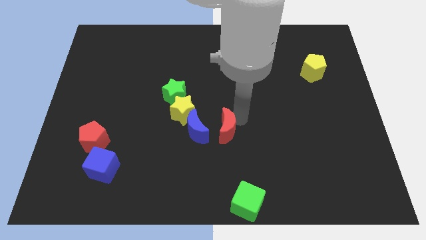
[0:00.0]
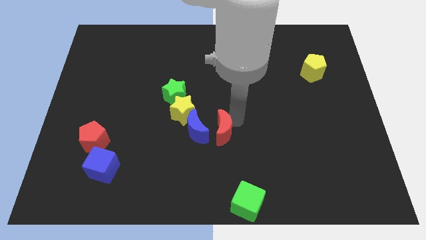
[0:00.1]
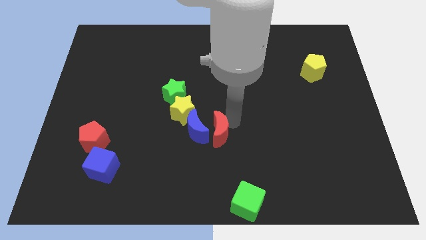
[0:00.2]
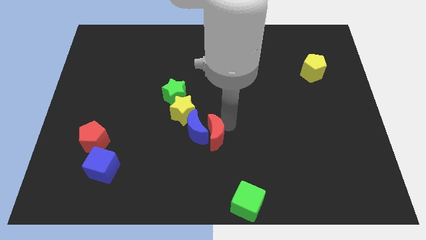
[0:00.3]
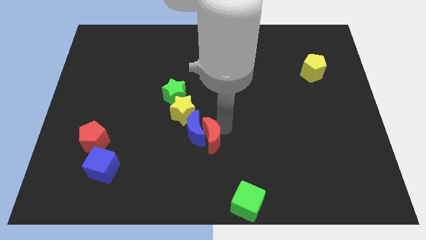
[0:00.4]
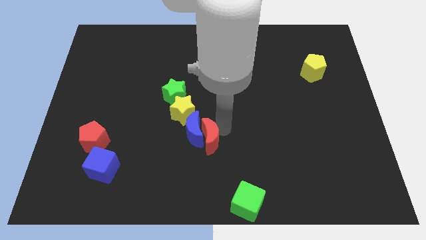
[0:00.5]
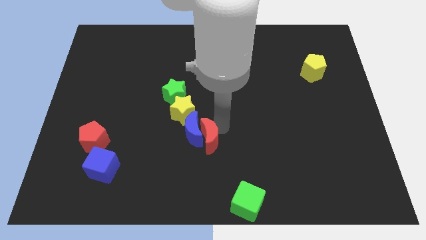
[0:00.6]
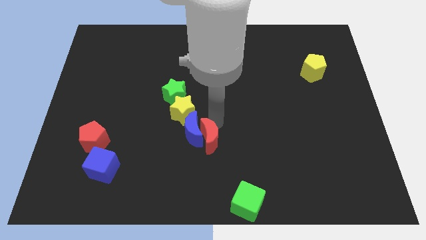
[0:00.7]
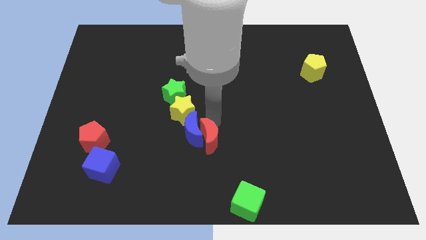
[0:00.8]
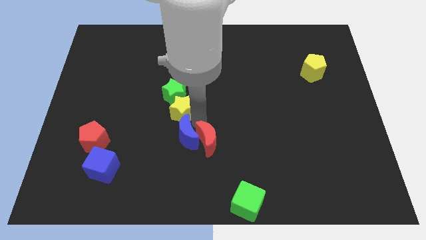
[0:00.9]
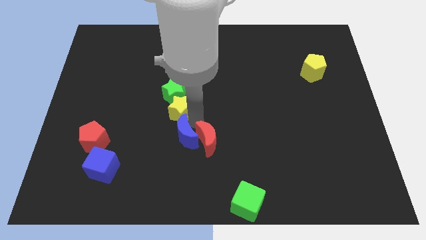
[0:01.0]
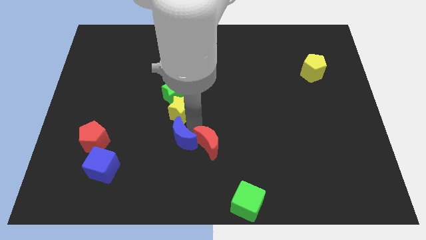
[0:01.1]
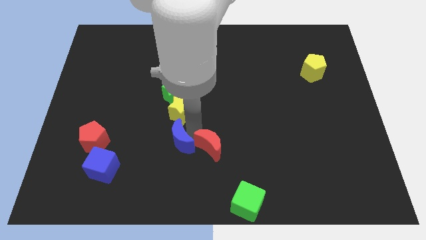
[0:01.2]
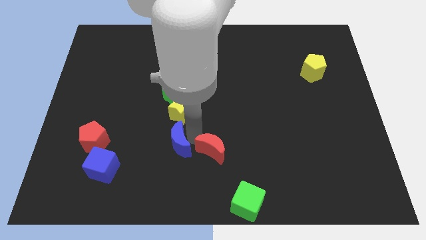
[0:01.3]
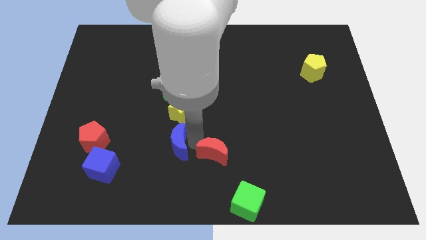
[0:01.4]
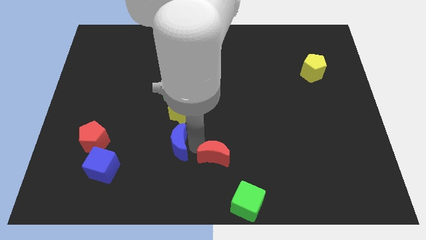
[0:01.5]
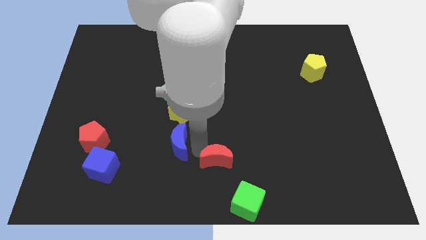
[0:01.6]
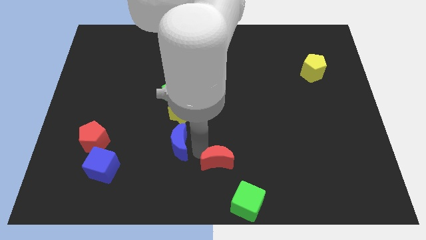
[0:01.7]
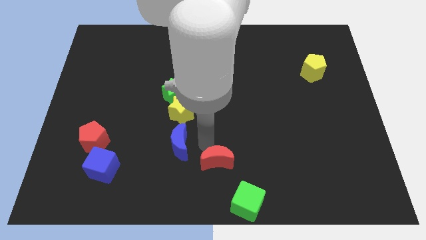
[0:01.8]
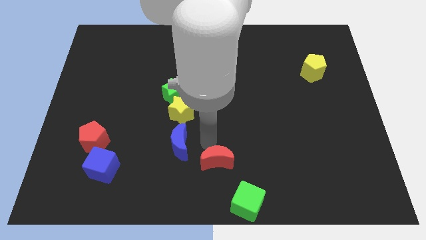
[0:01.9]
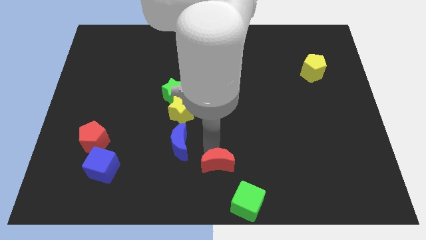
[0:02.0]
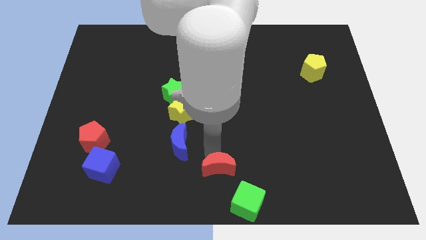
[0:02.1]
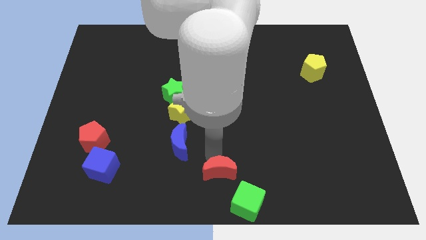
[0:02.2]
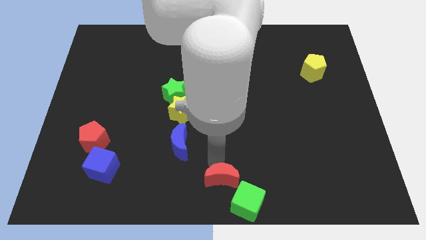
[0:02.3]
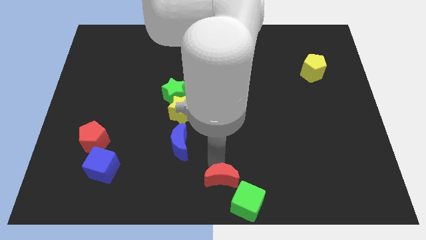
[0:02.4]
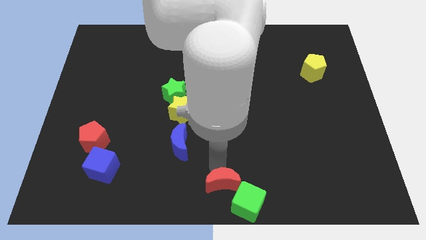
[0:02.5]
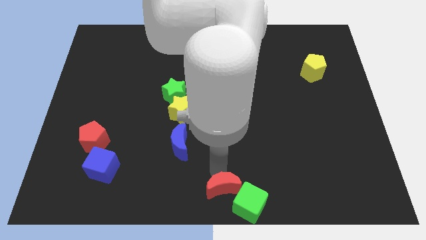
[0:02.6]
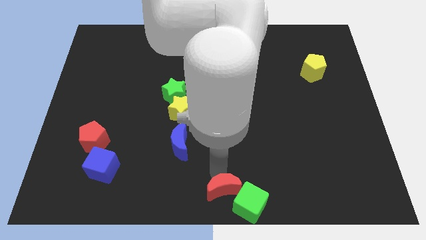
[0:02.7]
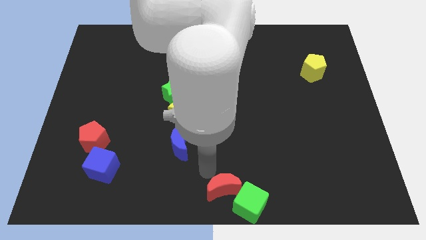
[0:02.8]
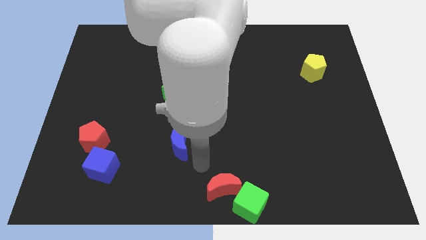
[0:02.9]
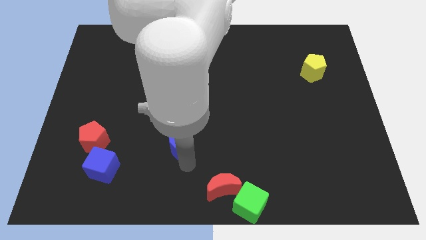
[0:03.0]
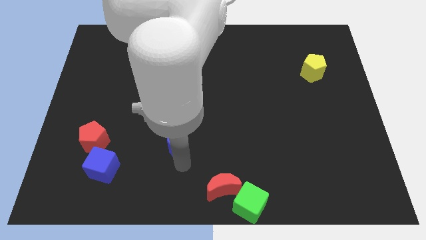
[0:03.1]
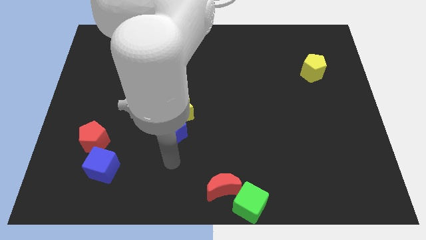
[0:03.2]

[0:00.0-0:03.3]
move the red crescent to the left of the green cube

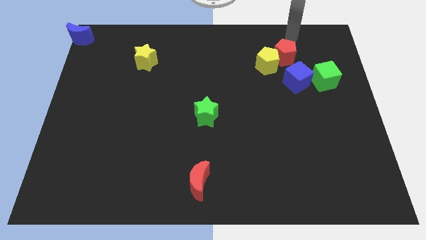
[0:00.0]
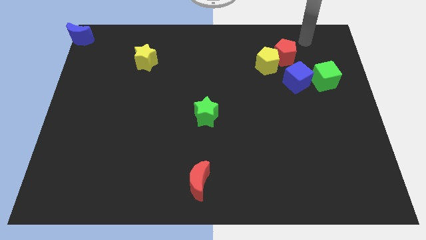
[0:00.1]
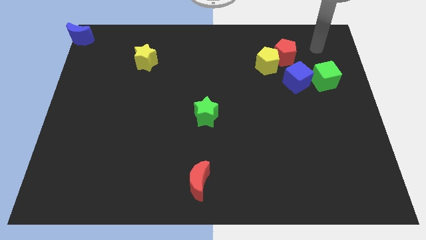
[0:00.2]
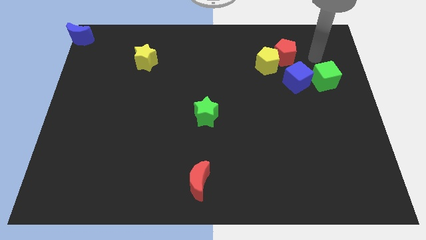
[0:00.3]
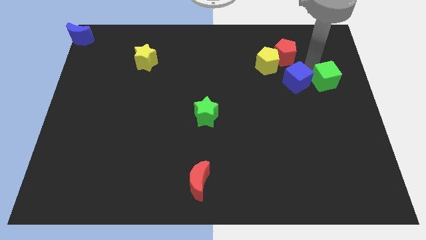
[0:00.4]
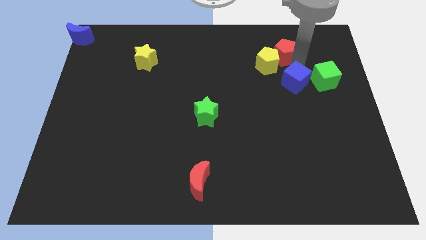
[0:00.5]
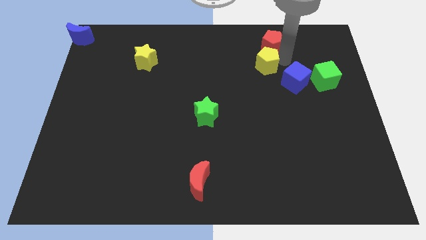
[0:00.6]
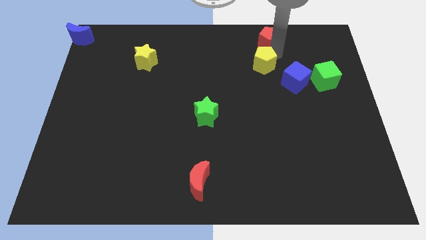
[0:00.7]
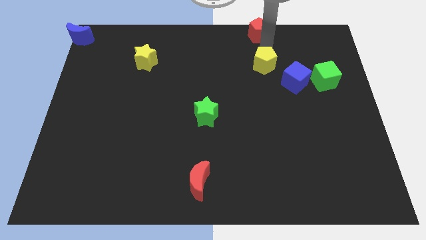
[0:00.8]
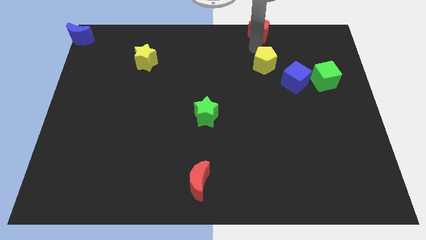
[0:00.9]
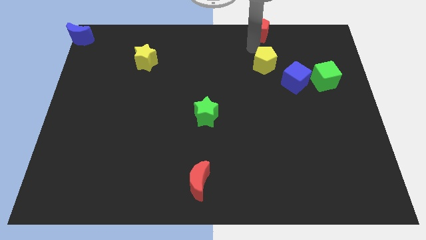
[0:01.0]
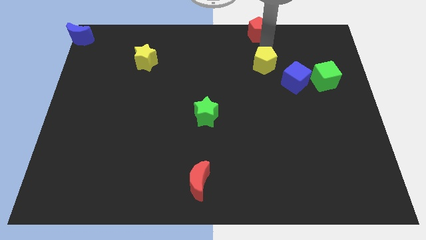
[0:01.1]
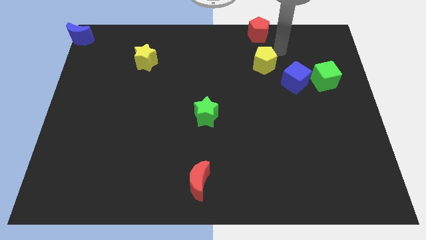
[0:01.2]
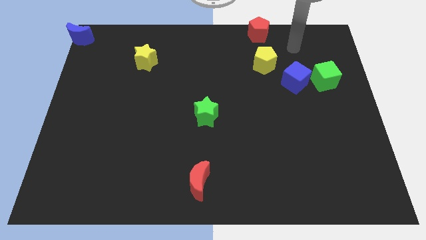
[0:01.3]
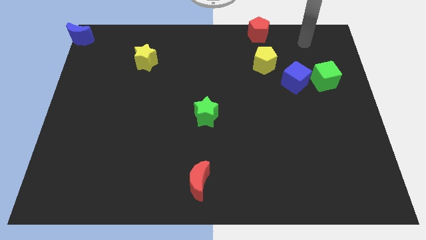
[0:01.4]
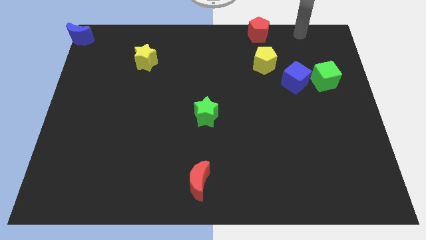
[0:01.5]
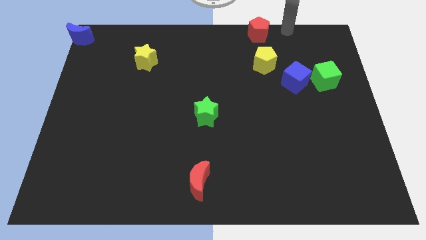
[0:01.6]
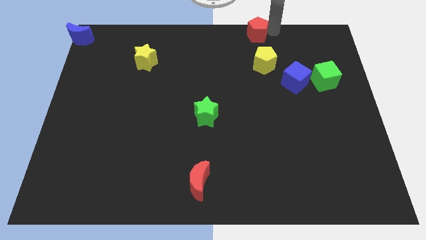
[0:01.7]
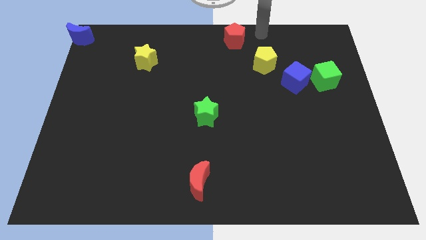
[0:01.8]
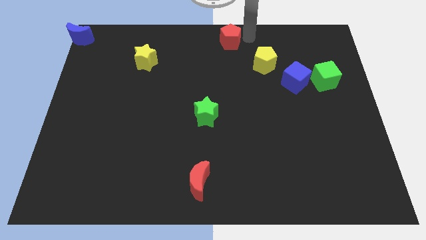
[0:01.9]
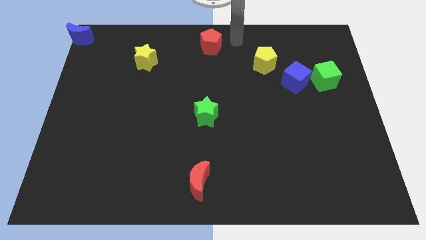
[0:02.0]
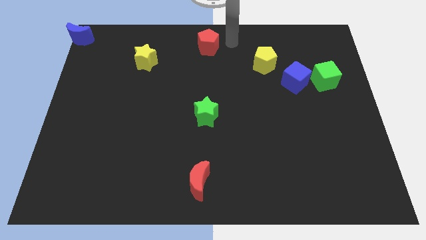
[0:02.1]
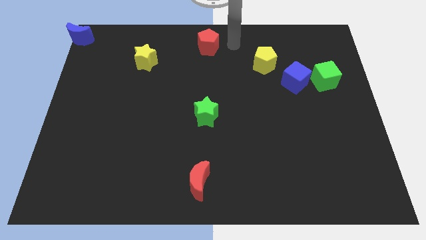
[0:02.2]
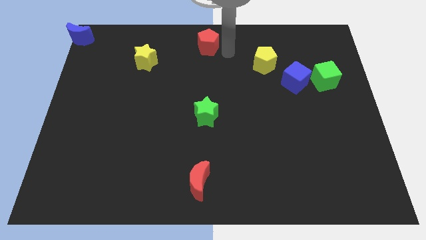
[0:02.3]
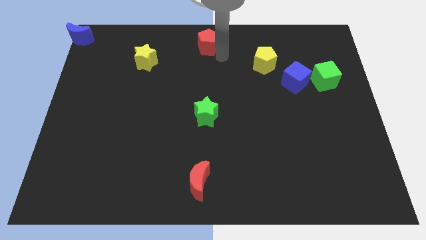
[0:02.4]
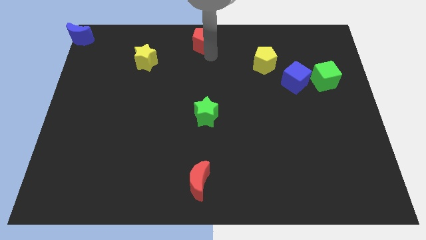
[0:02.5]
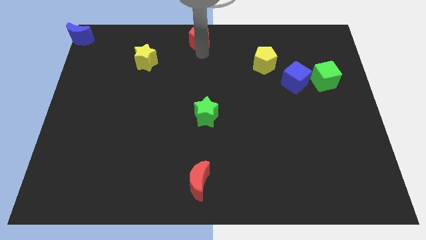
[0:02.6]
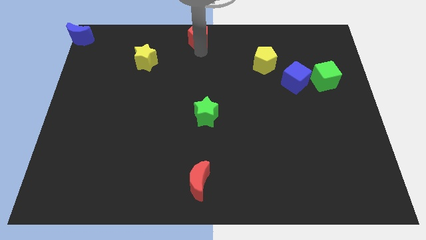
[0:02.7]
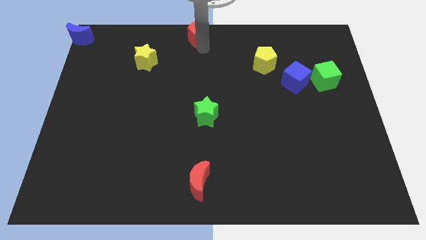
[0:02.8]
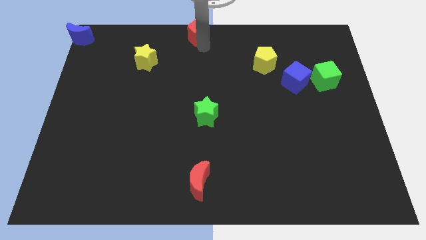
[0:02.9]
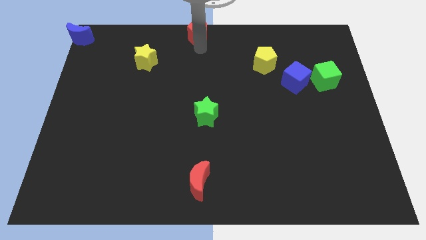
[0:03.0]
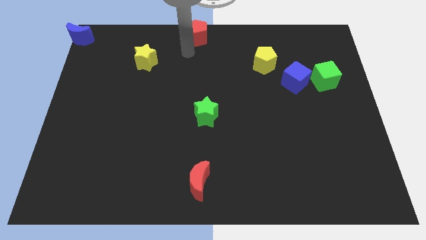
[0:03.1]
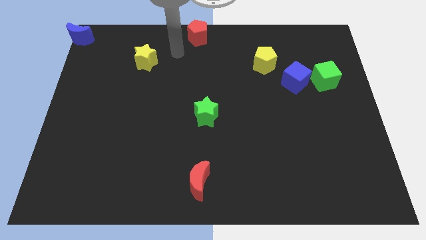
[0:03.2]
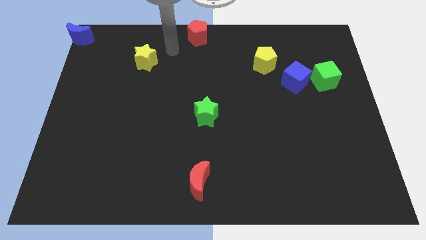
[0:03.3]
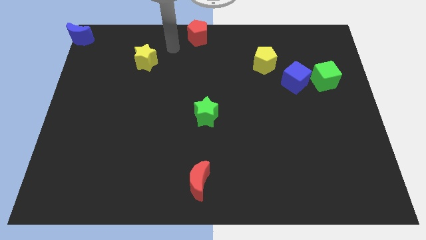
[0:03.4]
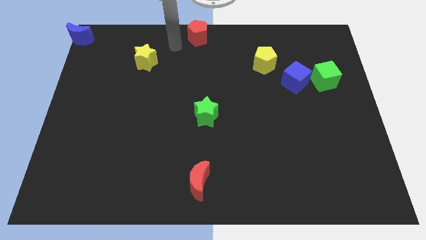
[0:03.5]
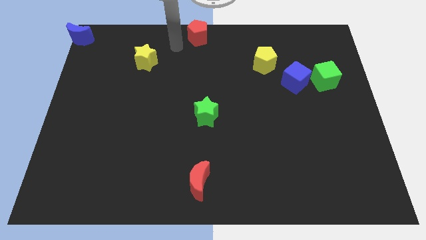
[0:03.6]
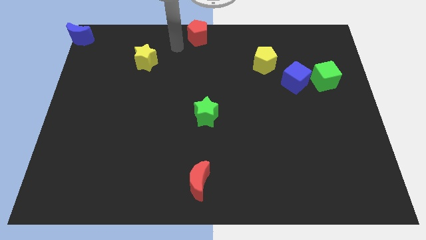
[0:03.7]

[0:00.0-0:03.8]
move the red pentagon to the top center of the board

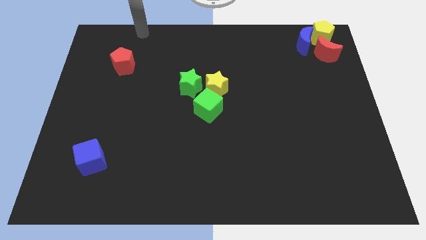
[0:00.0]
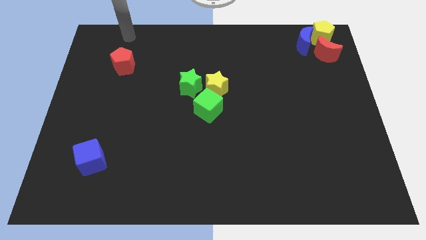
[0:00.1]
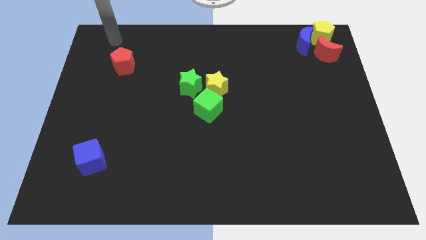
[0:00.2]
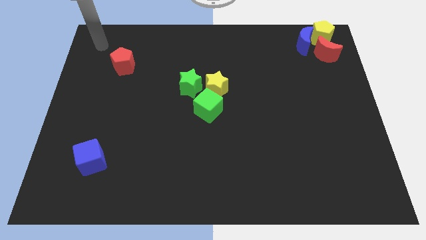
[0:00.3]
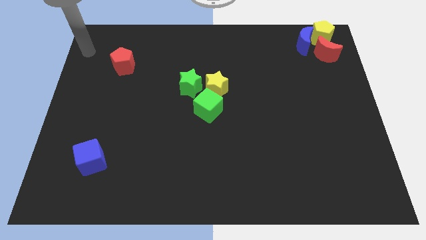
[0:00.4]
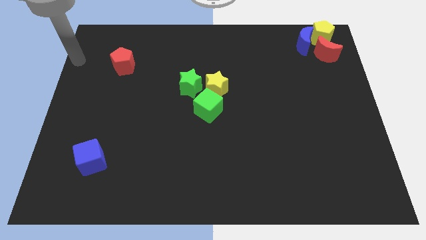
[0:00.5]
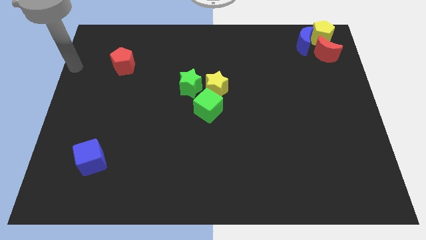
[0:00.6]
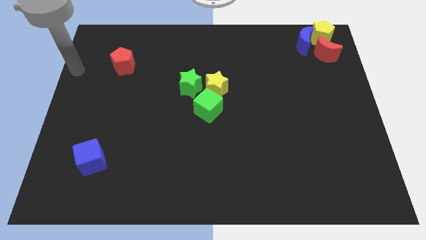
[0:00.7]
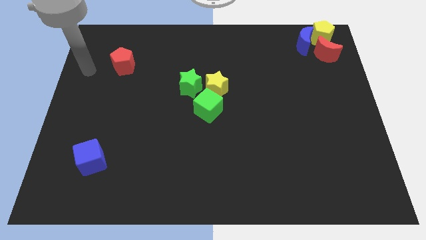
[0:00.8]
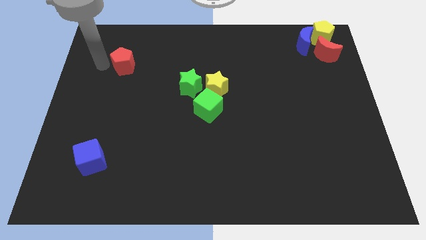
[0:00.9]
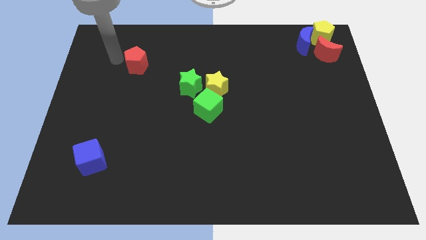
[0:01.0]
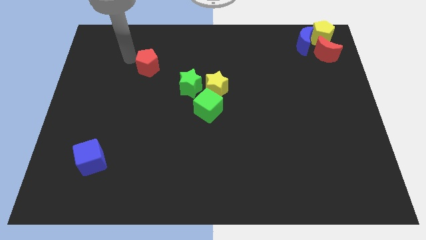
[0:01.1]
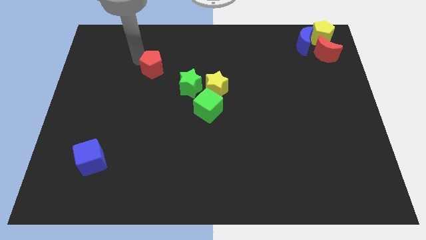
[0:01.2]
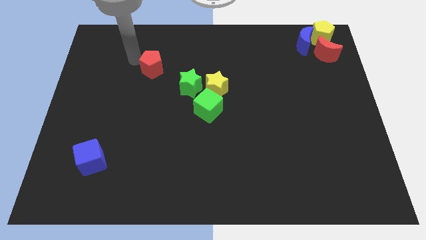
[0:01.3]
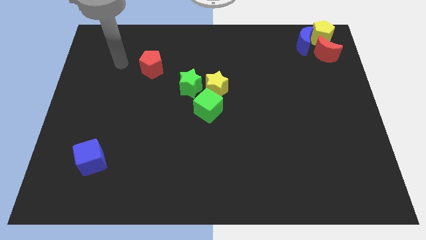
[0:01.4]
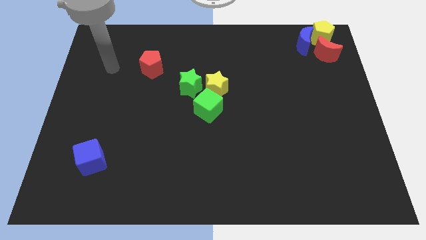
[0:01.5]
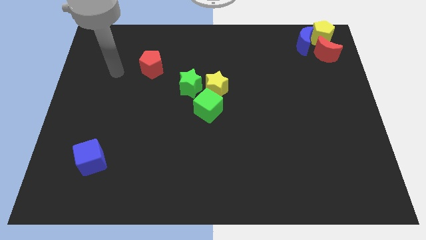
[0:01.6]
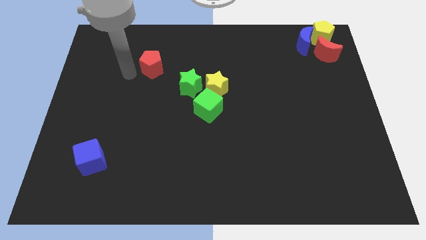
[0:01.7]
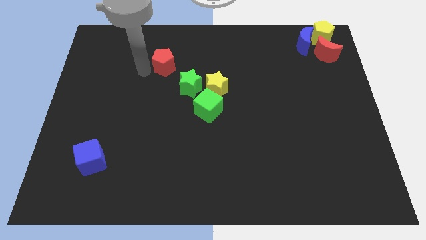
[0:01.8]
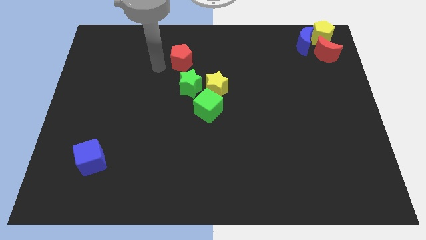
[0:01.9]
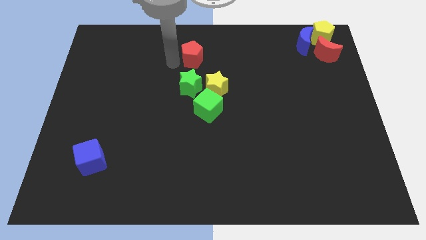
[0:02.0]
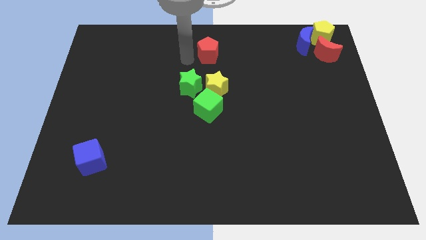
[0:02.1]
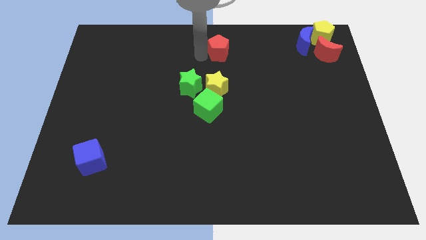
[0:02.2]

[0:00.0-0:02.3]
move the red pentagon above the yellow star
